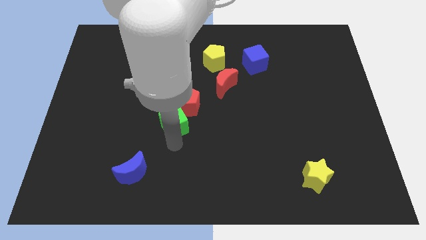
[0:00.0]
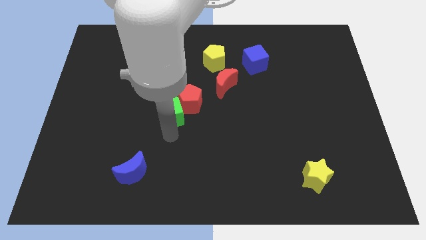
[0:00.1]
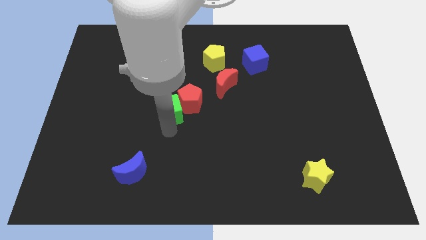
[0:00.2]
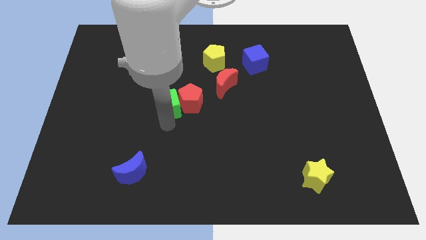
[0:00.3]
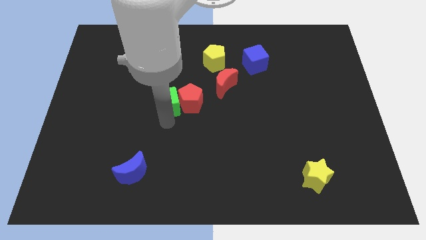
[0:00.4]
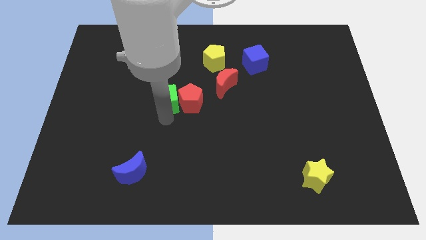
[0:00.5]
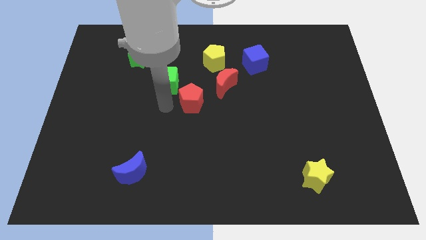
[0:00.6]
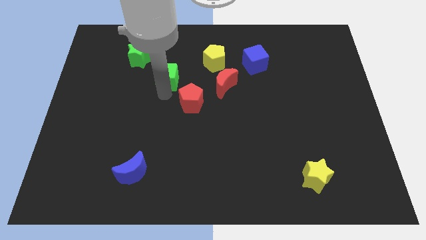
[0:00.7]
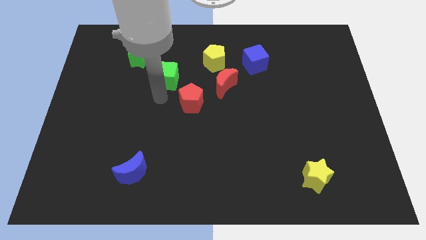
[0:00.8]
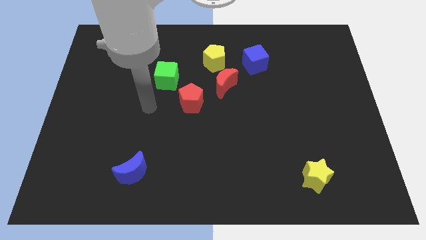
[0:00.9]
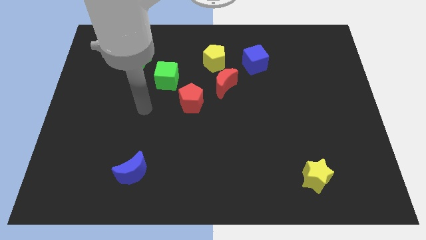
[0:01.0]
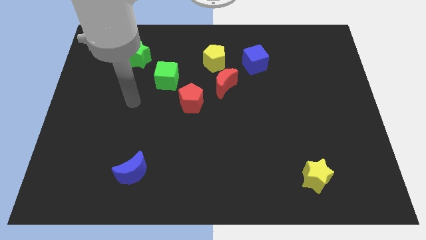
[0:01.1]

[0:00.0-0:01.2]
push green cube upwards

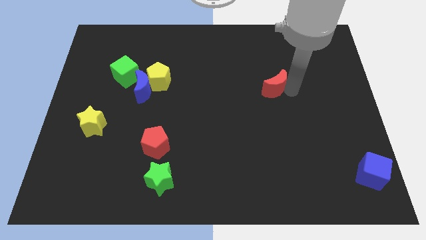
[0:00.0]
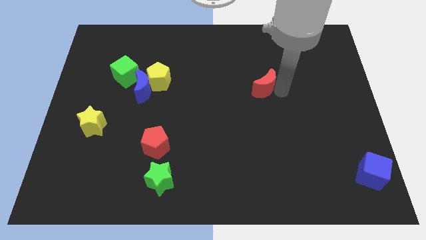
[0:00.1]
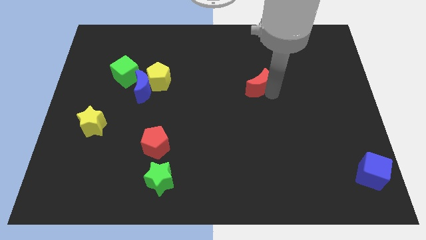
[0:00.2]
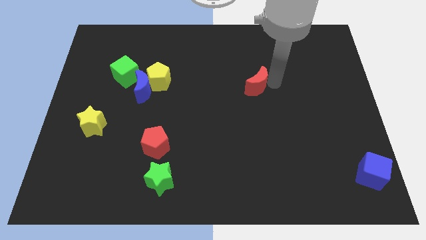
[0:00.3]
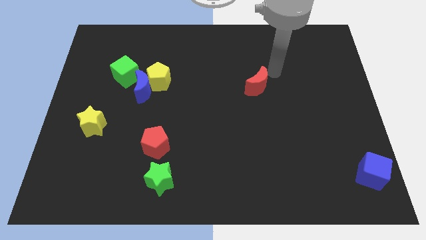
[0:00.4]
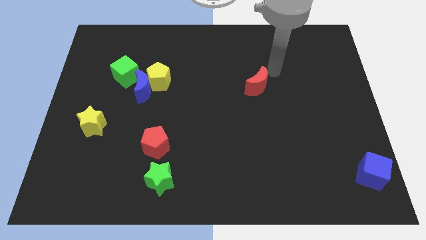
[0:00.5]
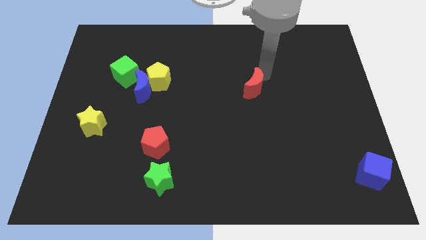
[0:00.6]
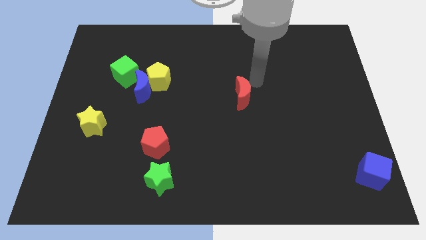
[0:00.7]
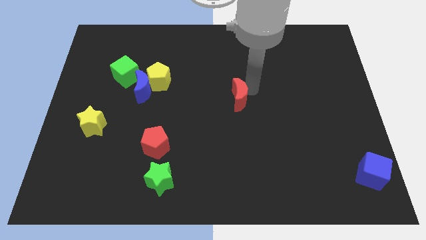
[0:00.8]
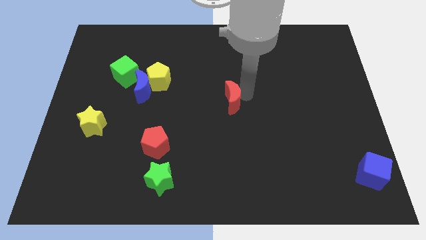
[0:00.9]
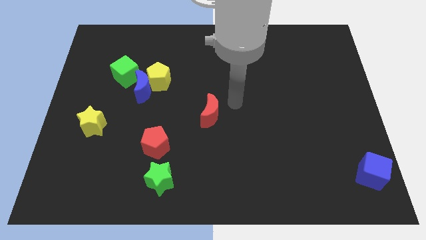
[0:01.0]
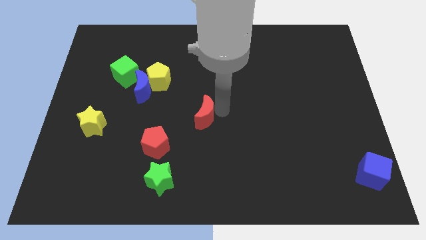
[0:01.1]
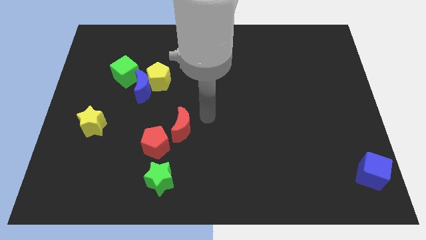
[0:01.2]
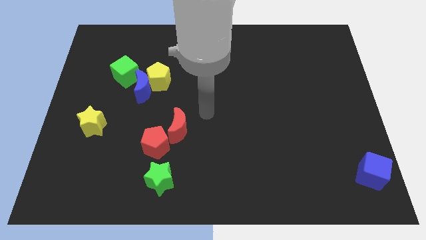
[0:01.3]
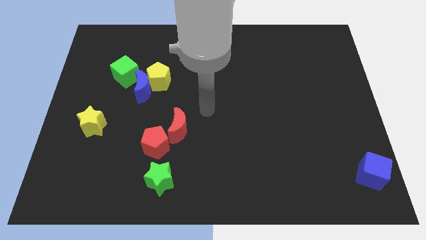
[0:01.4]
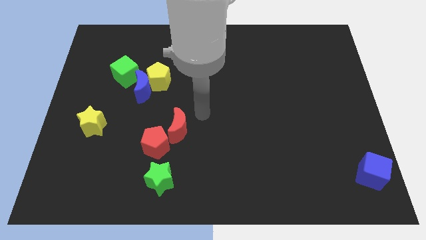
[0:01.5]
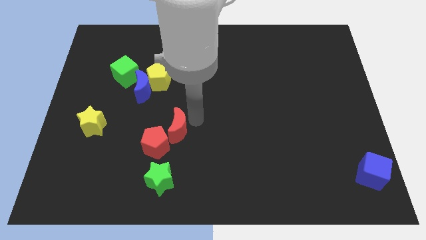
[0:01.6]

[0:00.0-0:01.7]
move red crescent near red pentagon

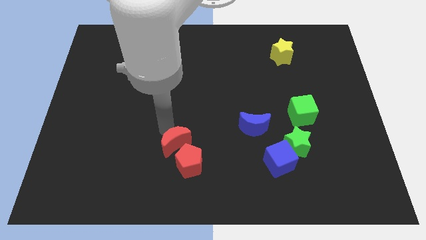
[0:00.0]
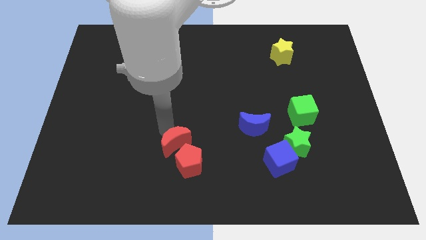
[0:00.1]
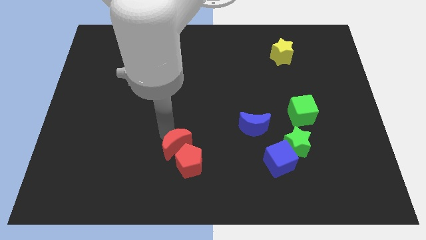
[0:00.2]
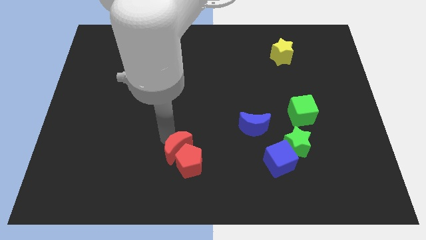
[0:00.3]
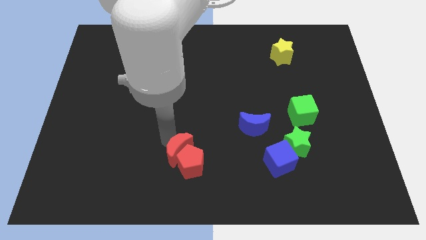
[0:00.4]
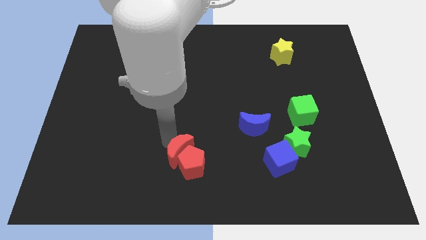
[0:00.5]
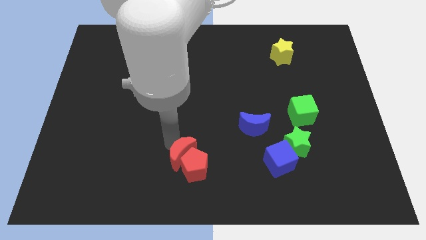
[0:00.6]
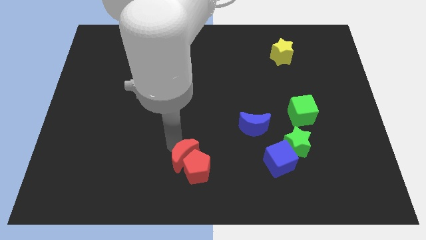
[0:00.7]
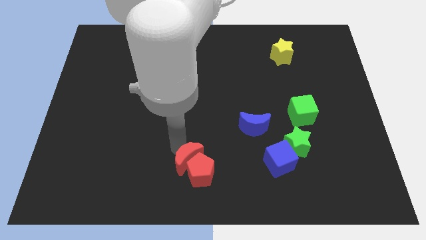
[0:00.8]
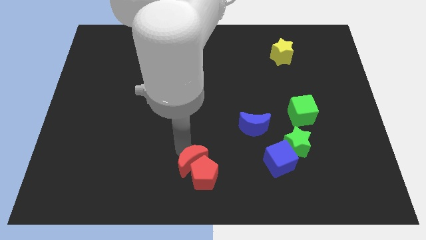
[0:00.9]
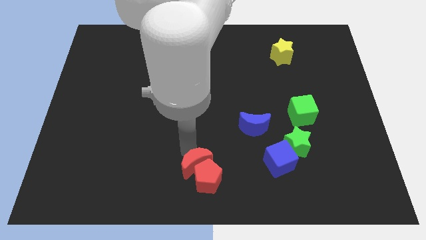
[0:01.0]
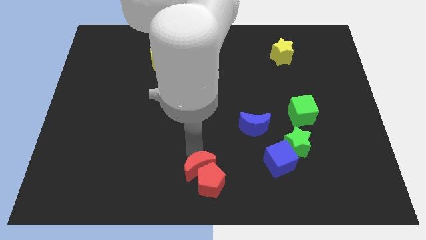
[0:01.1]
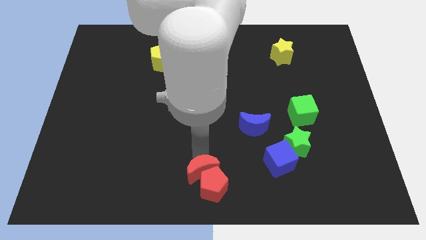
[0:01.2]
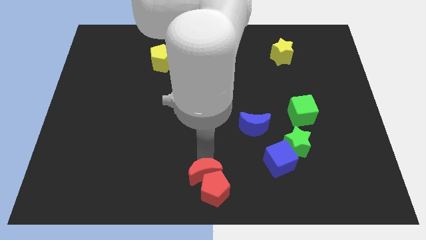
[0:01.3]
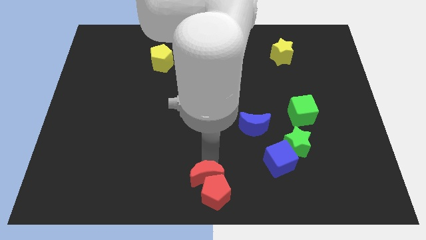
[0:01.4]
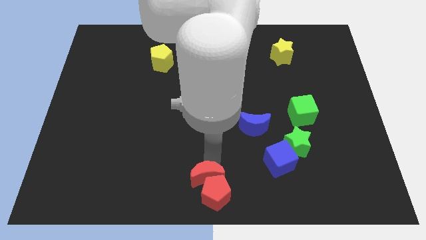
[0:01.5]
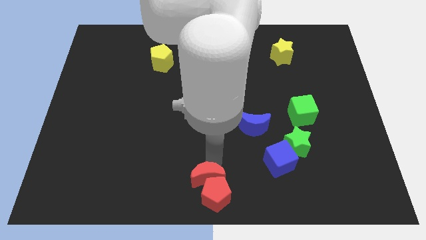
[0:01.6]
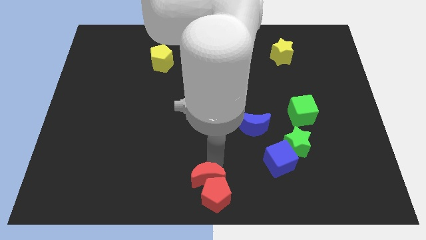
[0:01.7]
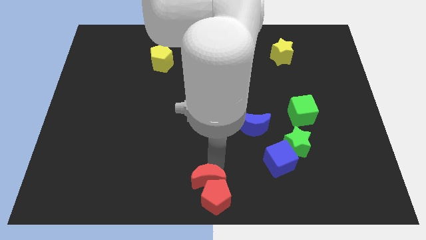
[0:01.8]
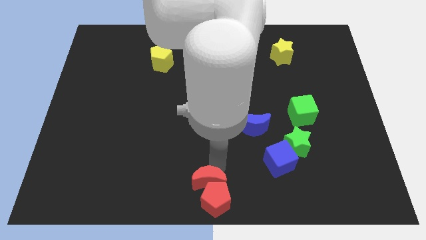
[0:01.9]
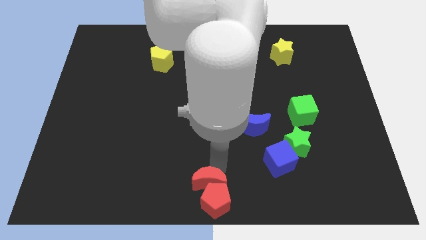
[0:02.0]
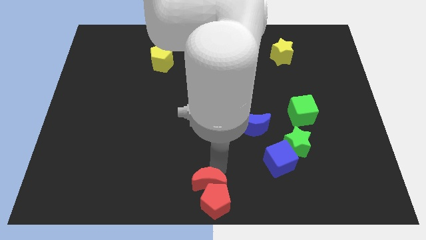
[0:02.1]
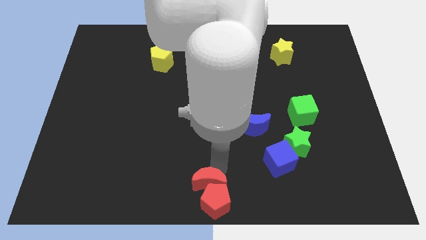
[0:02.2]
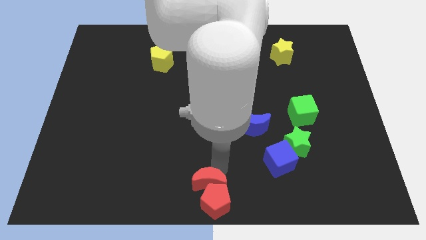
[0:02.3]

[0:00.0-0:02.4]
move red blocks to the bottom center of the board

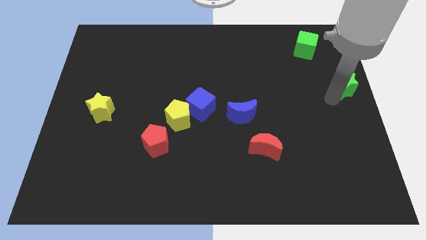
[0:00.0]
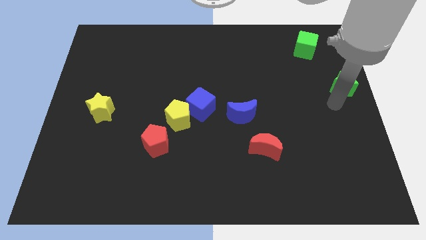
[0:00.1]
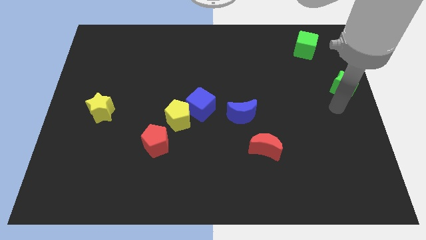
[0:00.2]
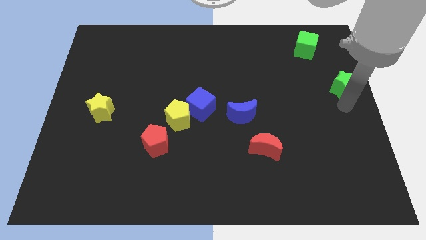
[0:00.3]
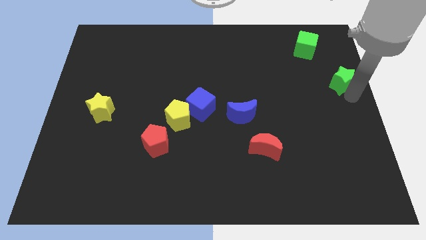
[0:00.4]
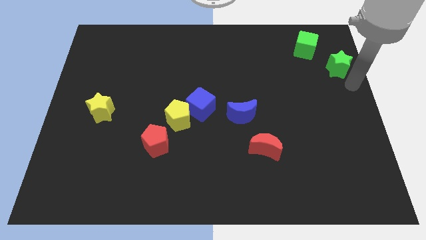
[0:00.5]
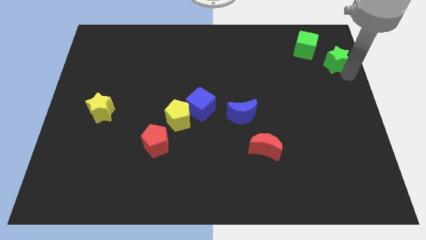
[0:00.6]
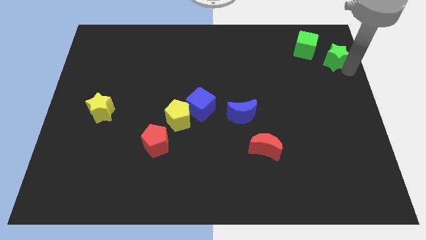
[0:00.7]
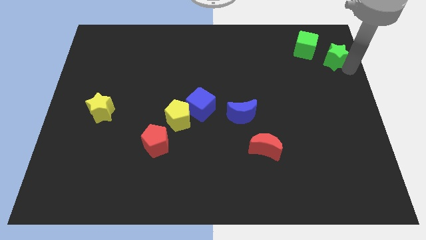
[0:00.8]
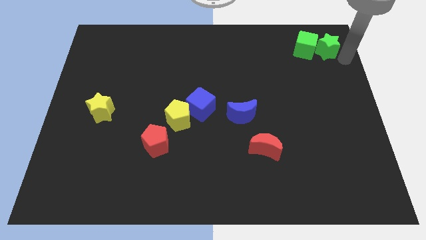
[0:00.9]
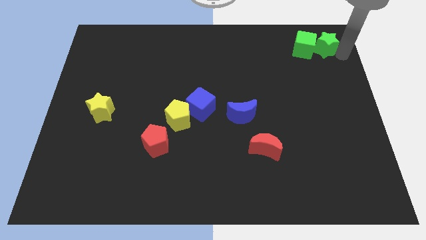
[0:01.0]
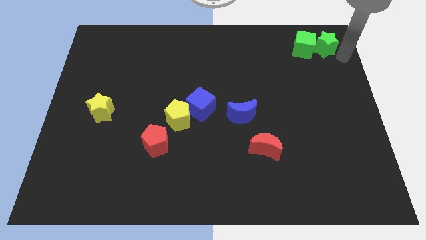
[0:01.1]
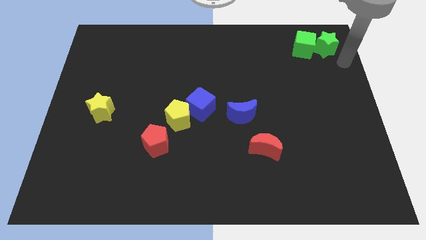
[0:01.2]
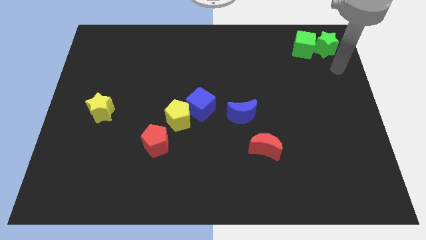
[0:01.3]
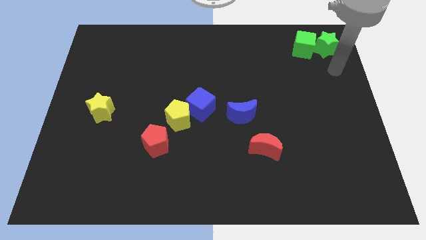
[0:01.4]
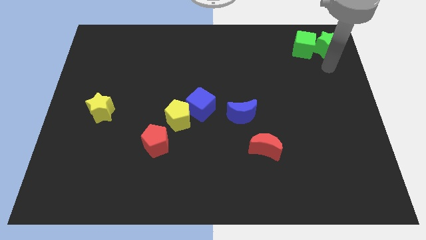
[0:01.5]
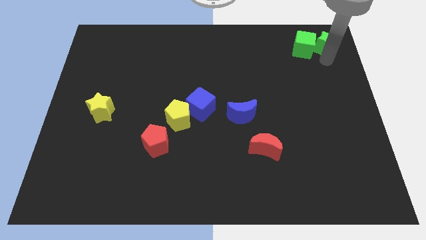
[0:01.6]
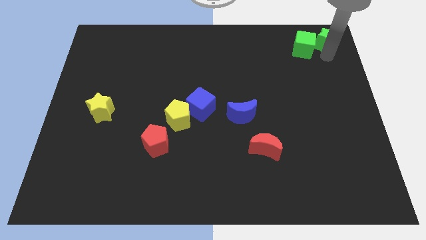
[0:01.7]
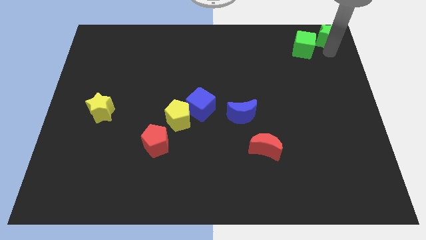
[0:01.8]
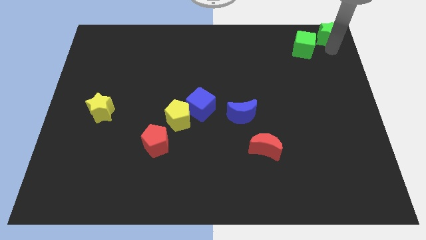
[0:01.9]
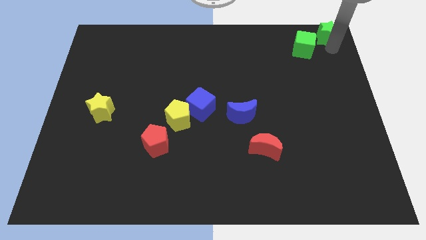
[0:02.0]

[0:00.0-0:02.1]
push the green star towards the top right corner

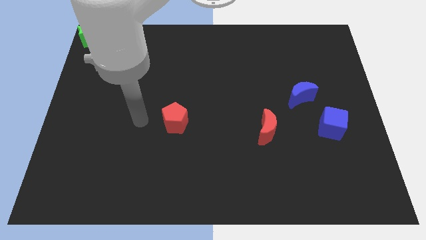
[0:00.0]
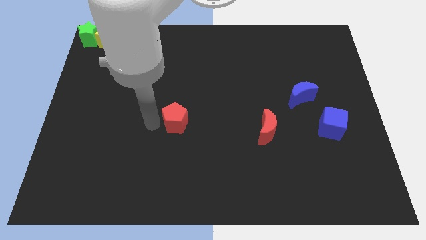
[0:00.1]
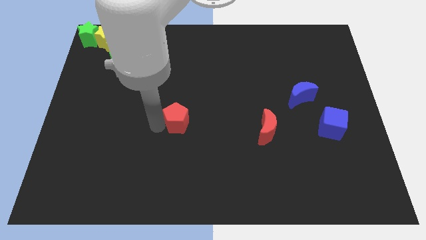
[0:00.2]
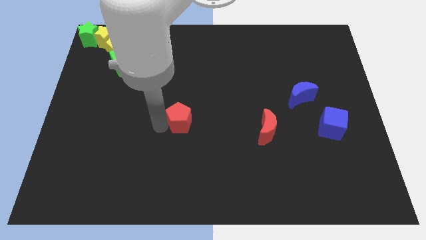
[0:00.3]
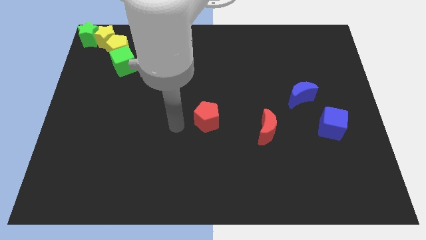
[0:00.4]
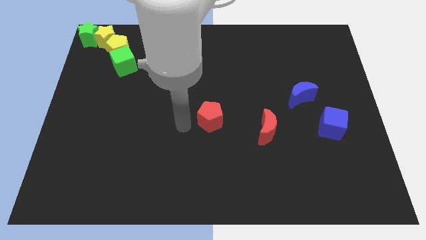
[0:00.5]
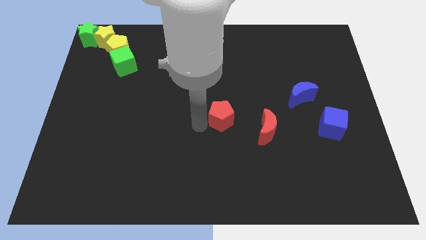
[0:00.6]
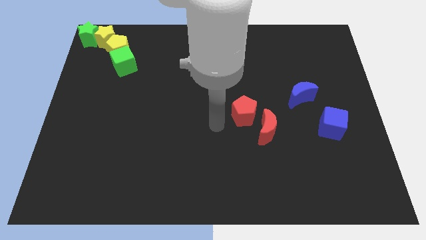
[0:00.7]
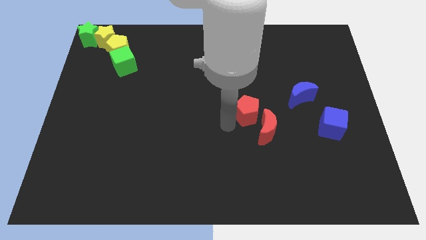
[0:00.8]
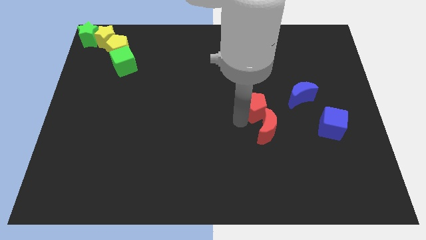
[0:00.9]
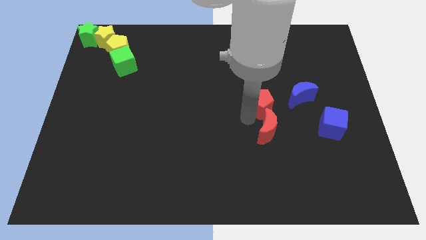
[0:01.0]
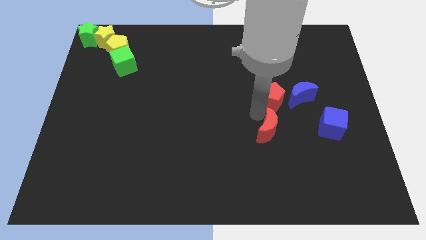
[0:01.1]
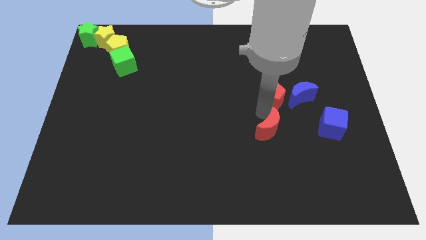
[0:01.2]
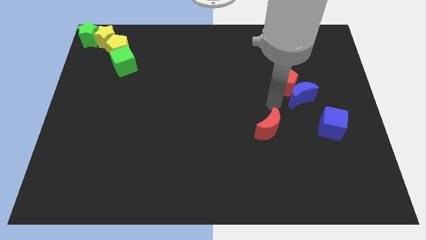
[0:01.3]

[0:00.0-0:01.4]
push the red pentagon to the top of the blue crescent

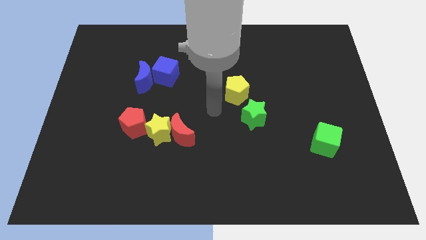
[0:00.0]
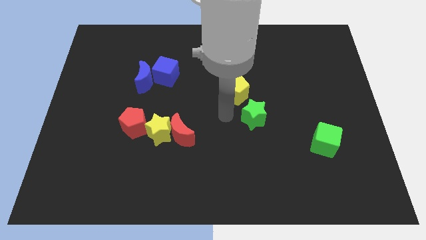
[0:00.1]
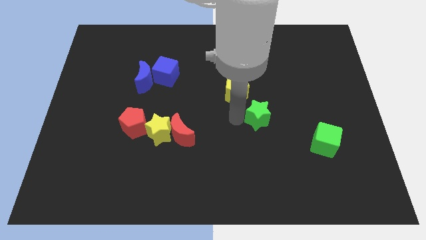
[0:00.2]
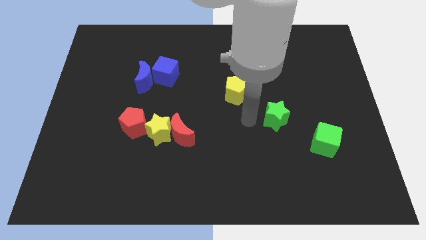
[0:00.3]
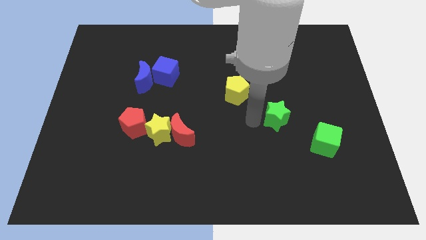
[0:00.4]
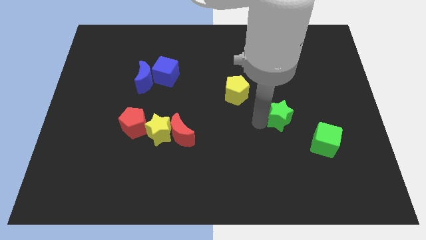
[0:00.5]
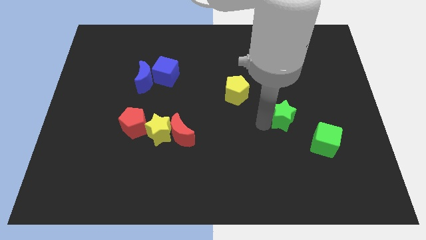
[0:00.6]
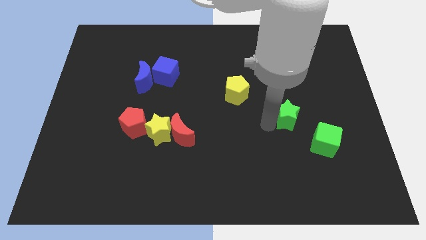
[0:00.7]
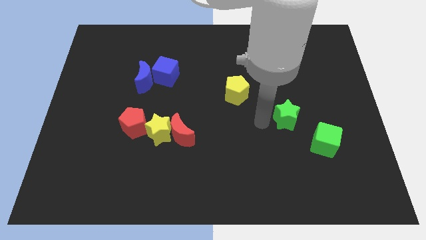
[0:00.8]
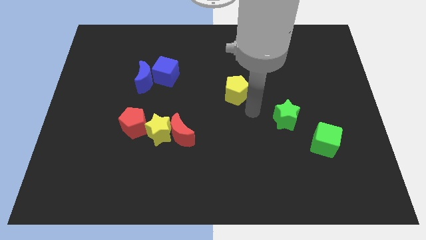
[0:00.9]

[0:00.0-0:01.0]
put the green star in between the yellow pentagon and green cube
